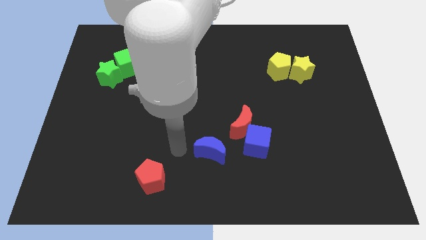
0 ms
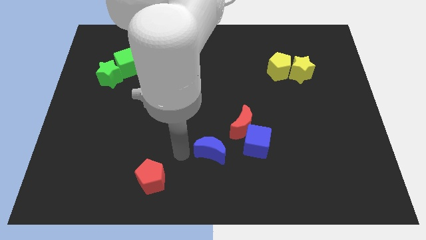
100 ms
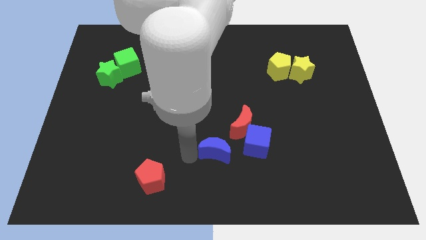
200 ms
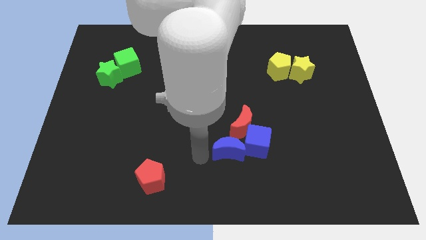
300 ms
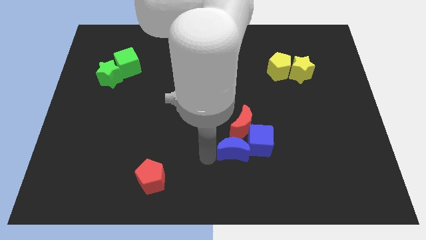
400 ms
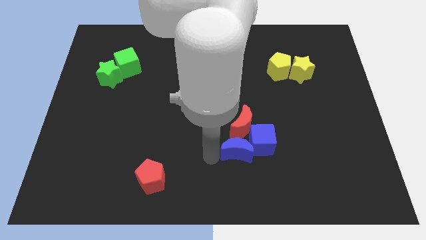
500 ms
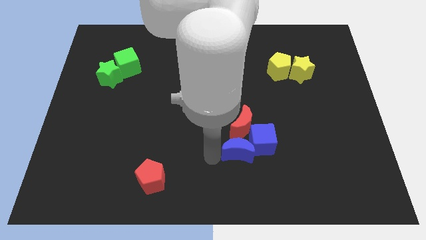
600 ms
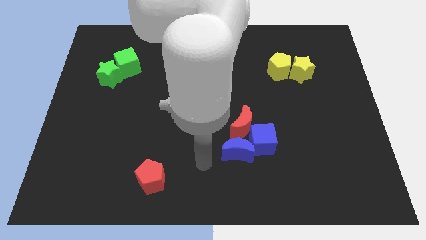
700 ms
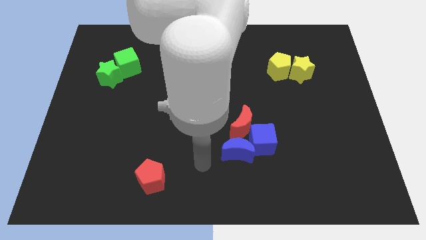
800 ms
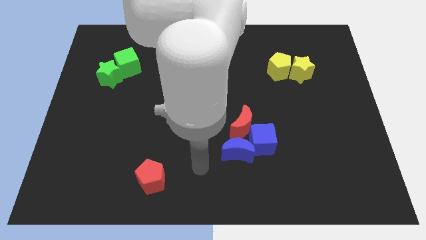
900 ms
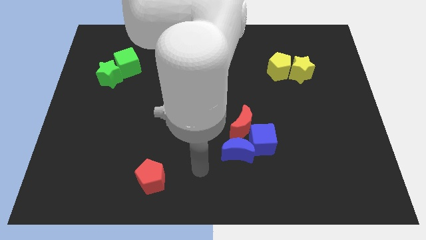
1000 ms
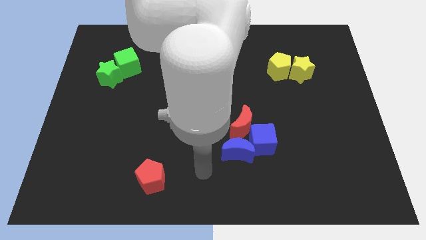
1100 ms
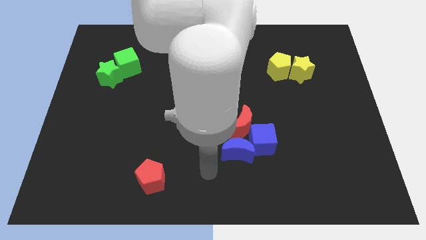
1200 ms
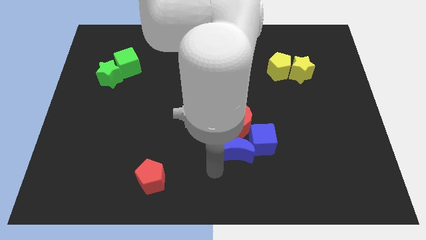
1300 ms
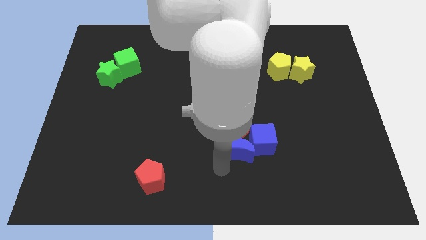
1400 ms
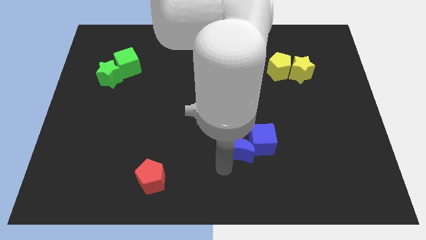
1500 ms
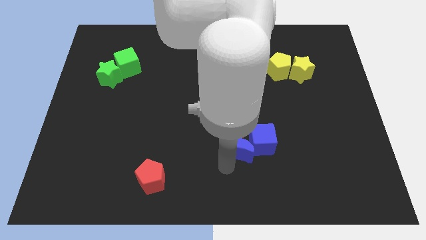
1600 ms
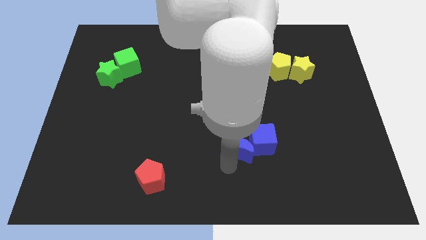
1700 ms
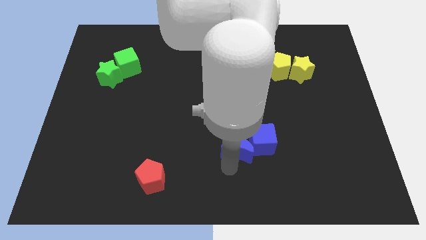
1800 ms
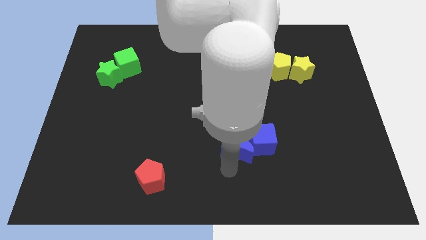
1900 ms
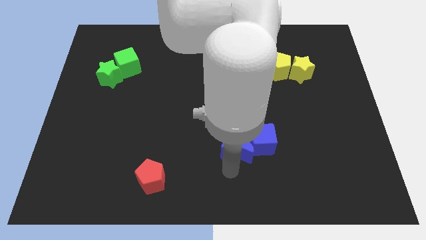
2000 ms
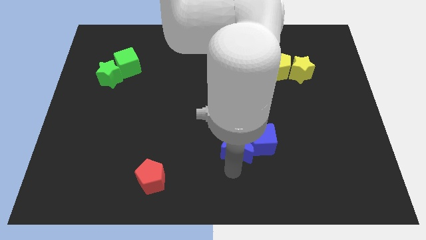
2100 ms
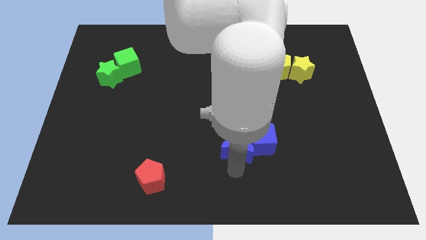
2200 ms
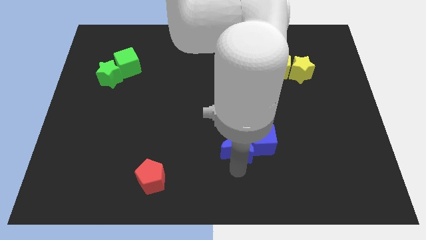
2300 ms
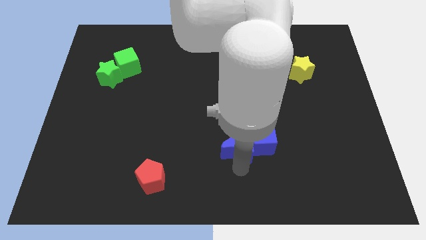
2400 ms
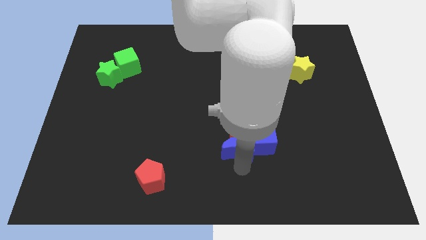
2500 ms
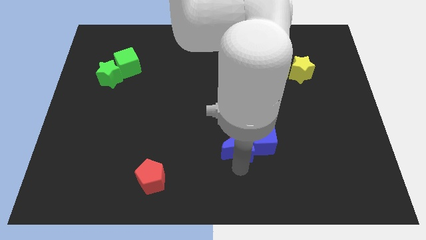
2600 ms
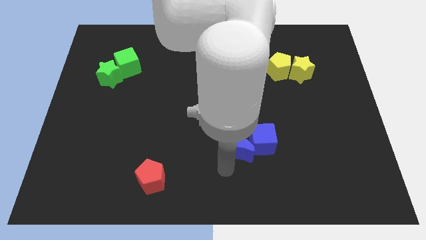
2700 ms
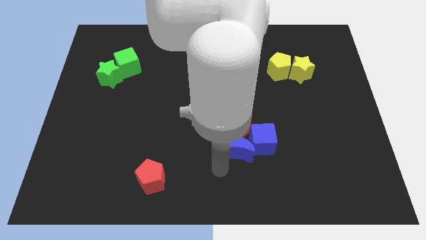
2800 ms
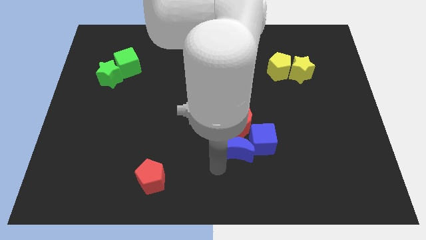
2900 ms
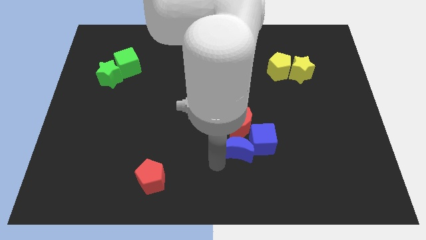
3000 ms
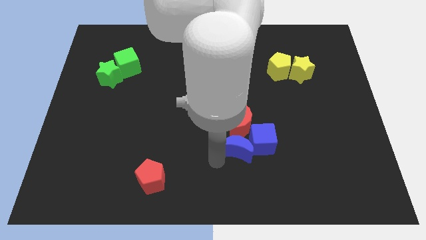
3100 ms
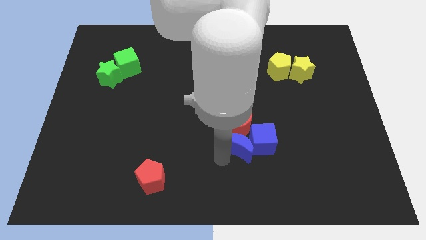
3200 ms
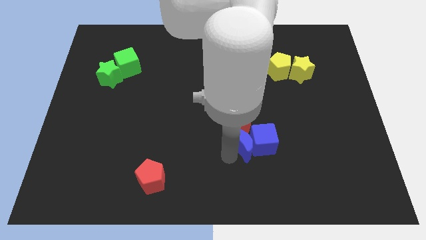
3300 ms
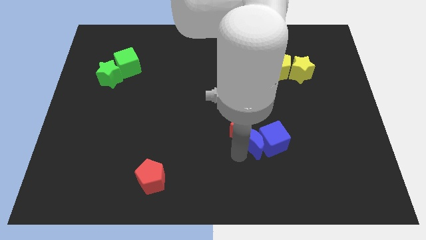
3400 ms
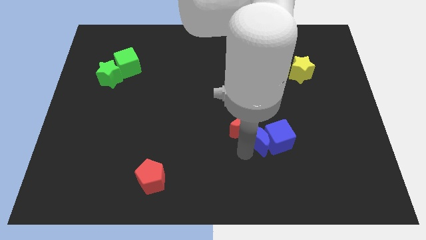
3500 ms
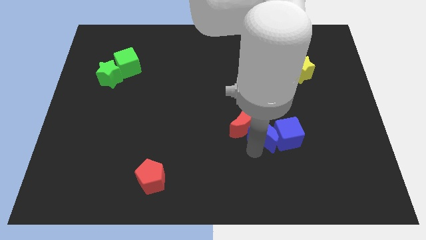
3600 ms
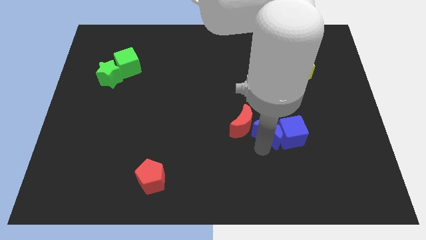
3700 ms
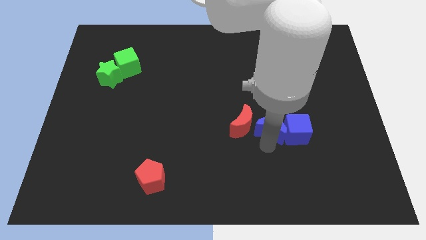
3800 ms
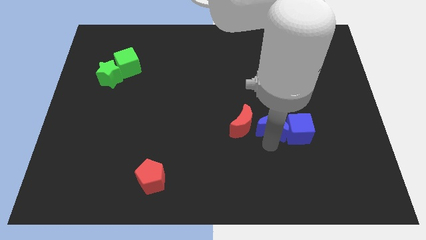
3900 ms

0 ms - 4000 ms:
move blue blocks right to the red moon

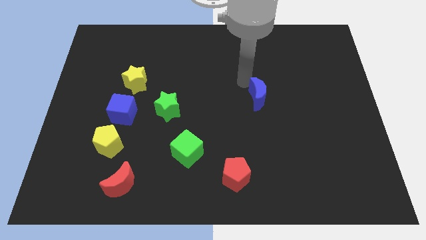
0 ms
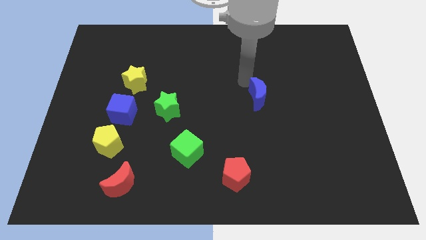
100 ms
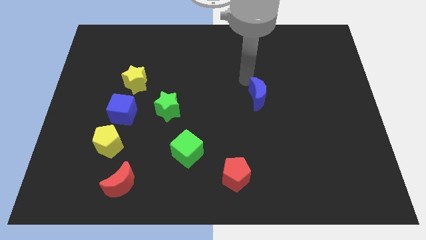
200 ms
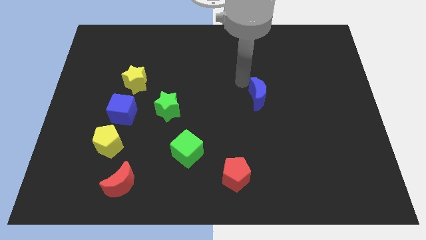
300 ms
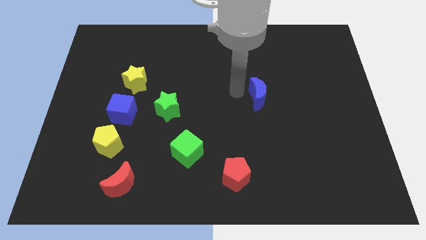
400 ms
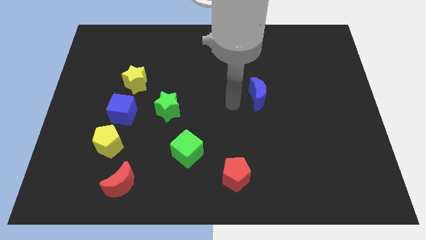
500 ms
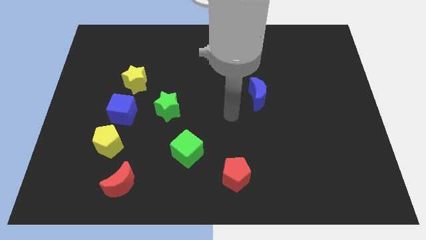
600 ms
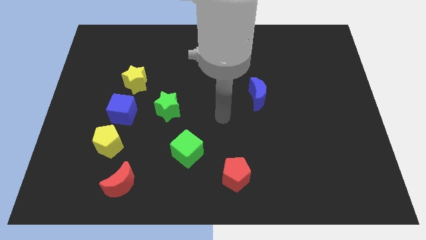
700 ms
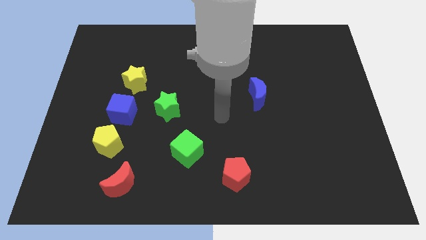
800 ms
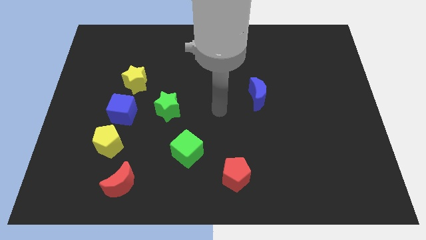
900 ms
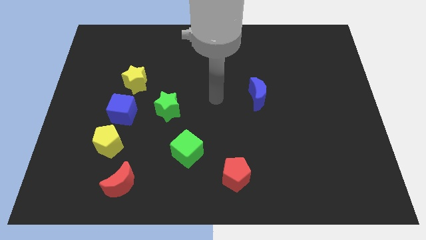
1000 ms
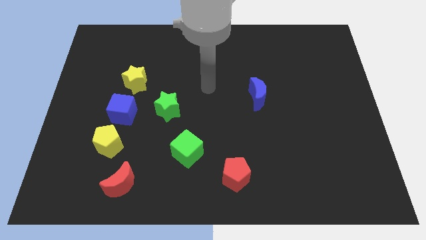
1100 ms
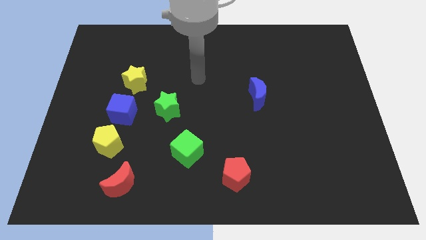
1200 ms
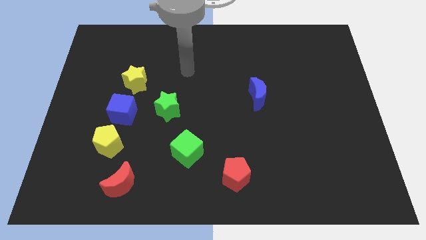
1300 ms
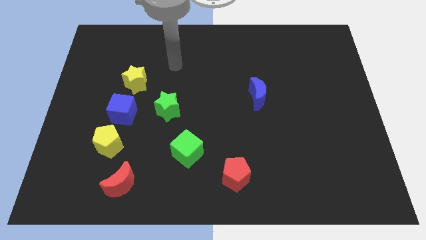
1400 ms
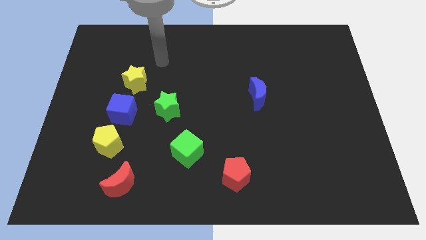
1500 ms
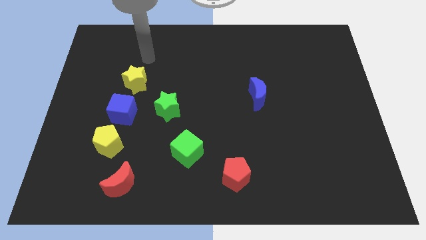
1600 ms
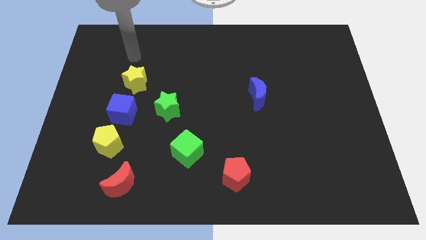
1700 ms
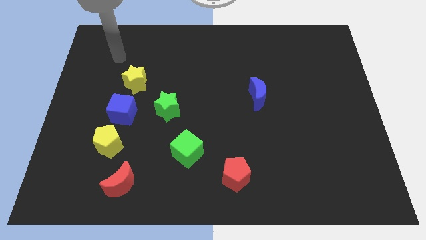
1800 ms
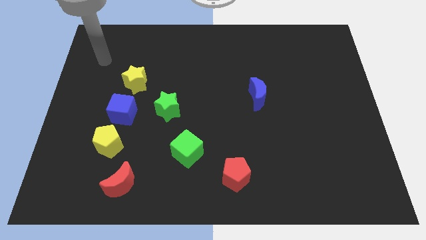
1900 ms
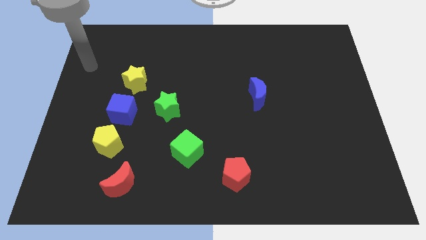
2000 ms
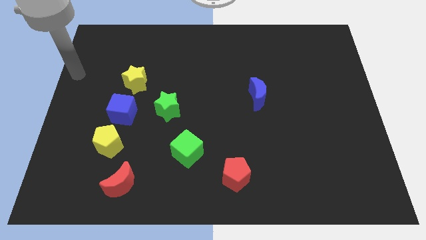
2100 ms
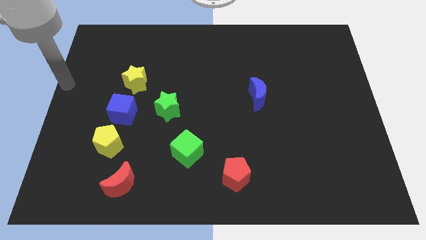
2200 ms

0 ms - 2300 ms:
move your arm away from the blue moon

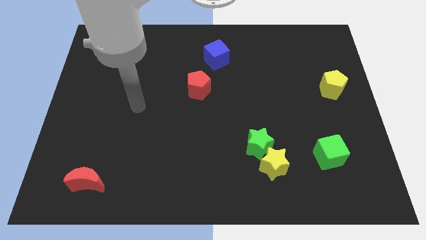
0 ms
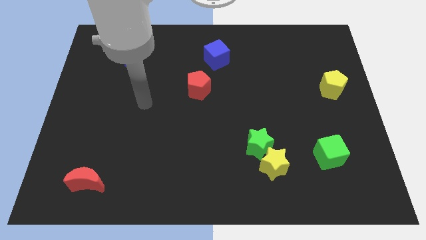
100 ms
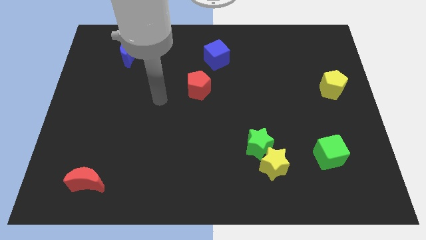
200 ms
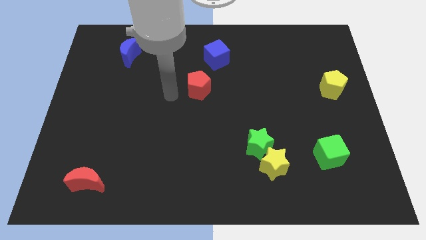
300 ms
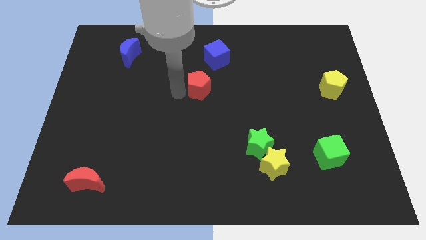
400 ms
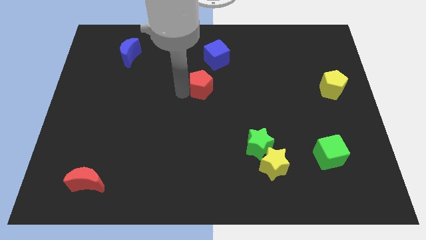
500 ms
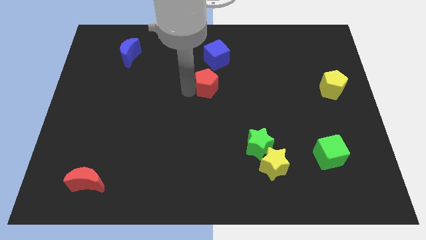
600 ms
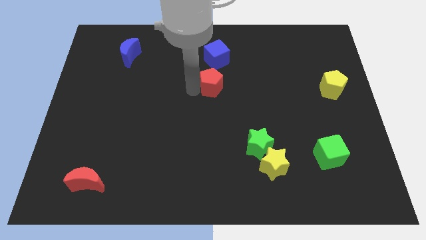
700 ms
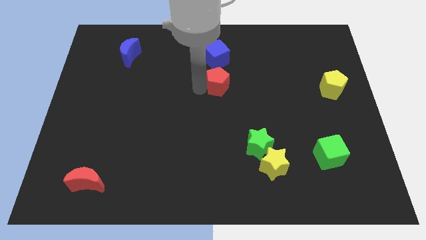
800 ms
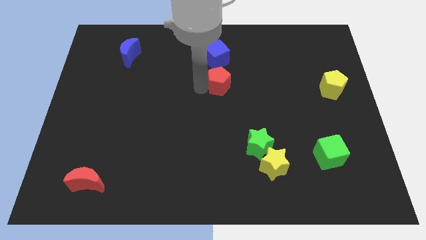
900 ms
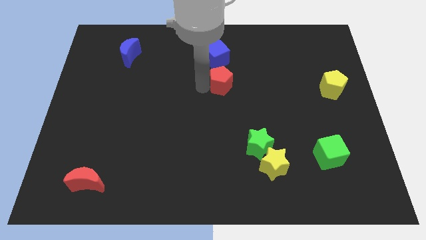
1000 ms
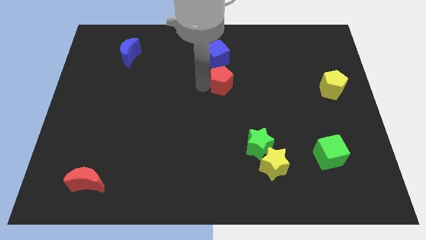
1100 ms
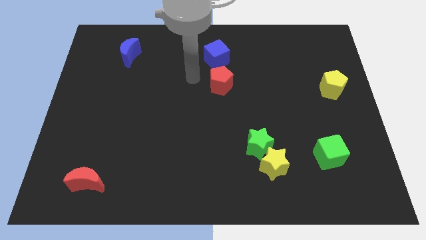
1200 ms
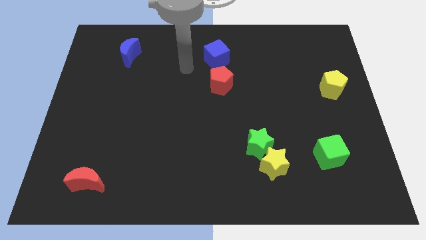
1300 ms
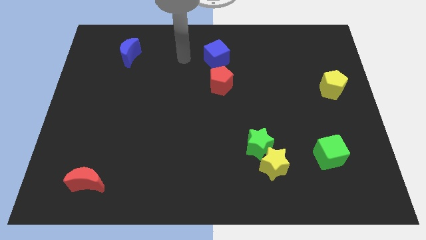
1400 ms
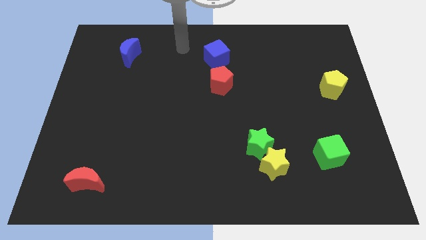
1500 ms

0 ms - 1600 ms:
move the red pentagon below the blue cube

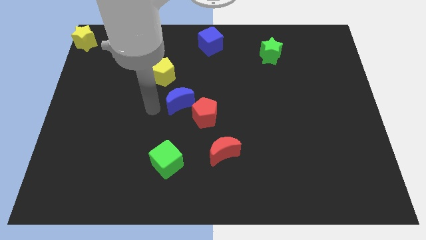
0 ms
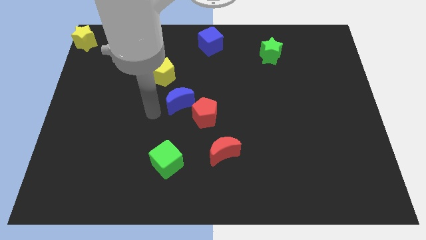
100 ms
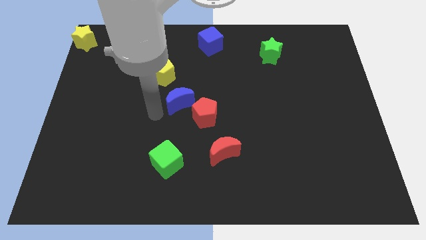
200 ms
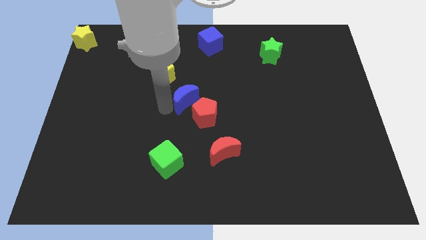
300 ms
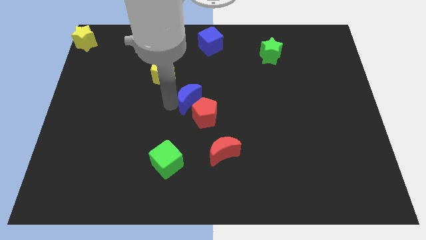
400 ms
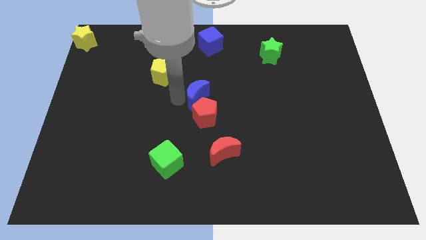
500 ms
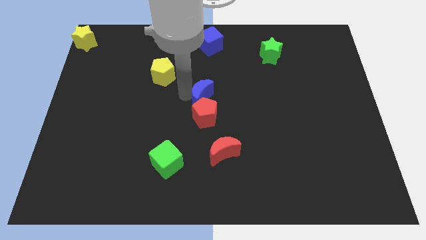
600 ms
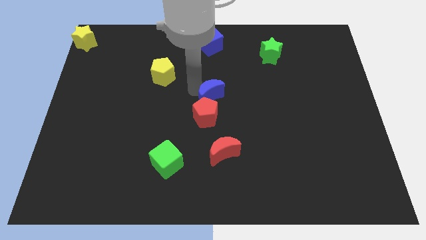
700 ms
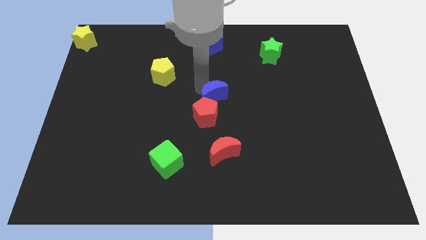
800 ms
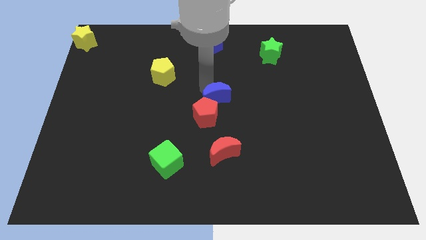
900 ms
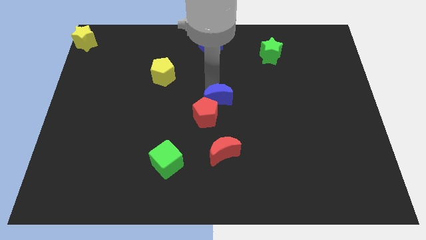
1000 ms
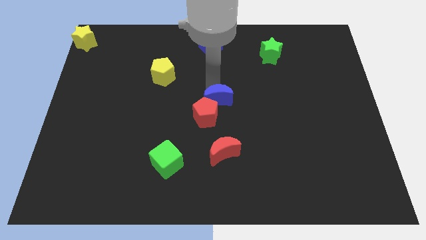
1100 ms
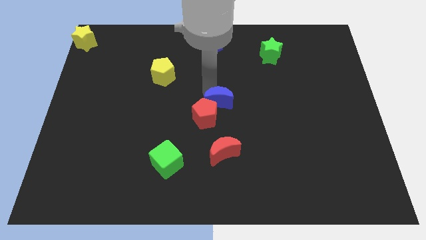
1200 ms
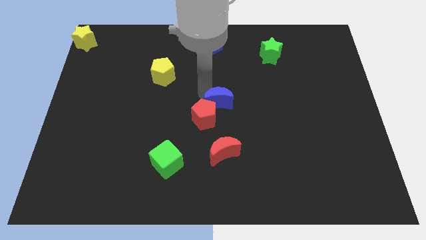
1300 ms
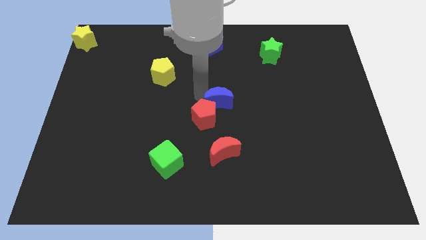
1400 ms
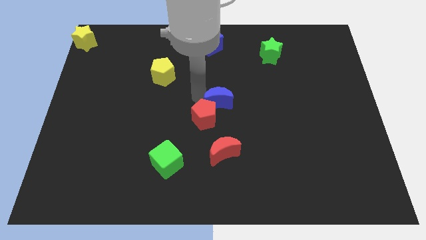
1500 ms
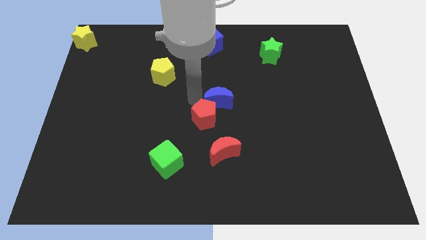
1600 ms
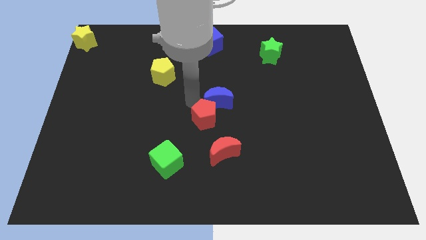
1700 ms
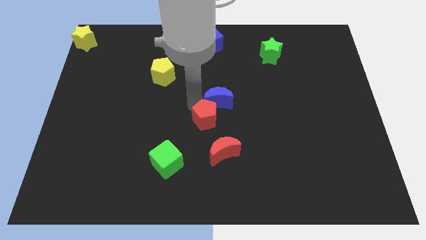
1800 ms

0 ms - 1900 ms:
make the blue crescent to touch the red pentagon
